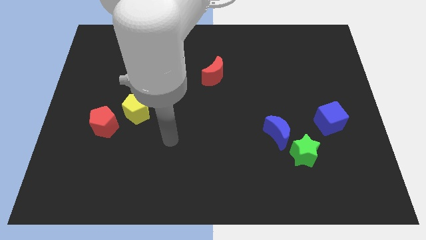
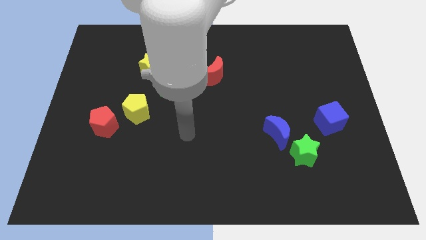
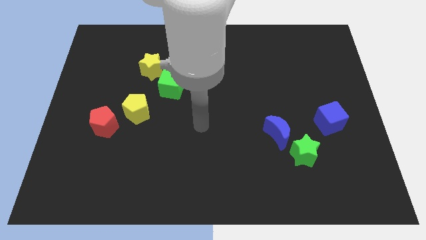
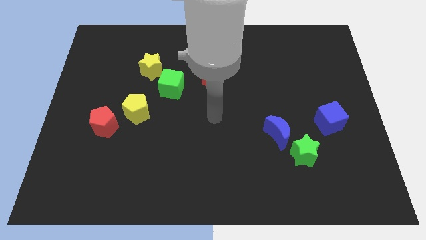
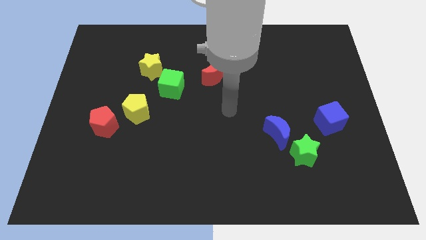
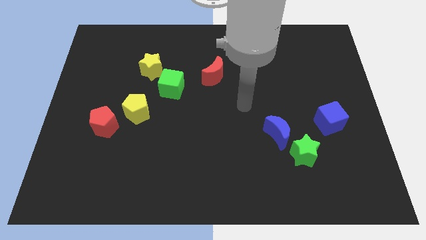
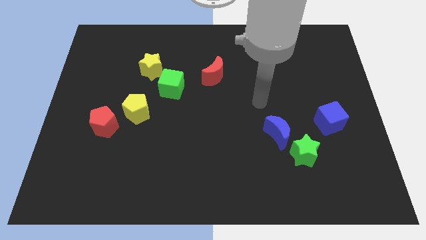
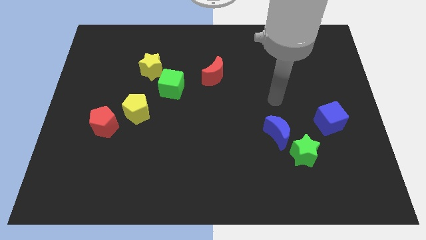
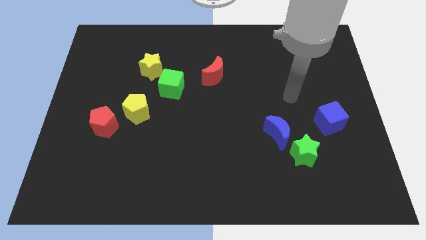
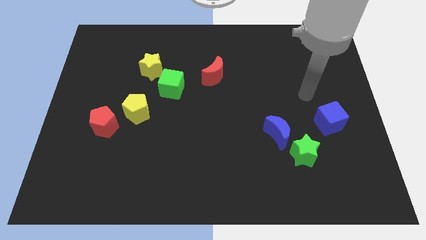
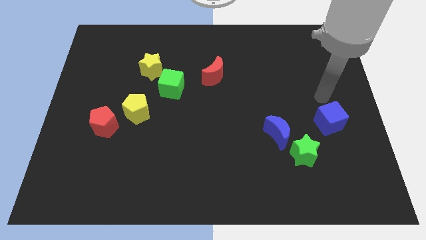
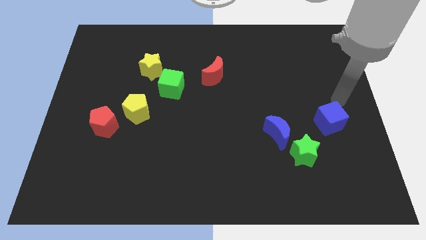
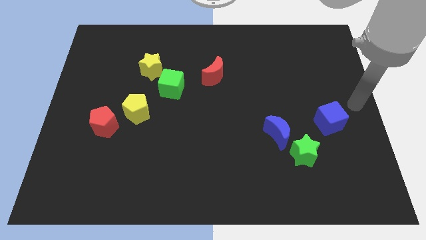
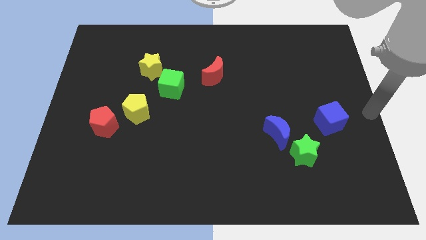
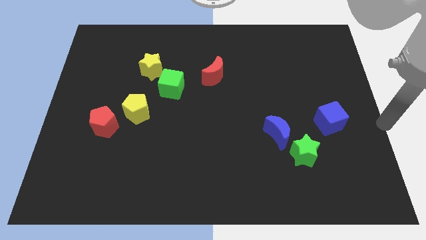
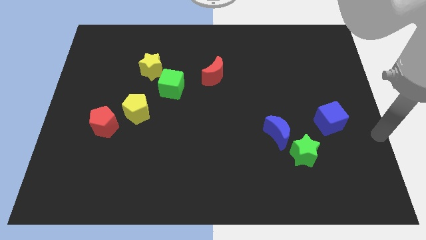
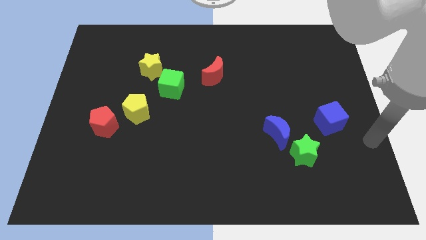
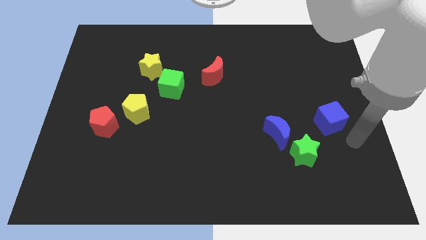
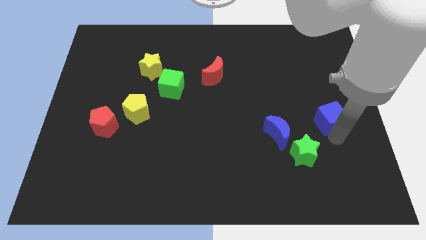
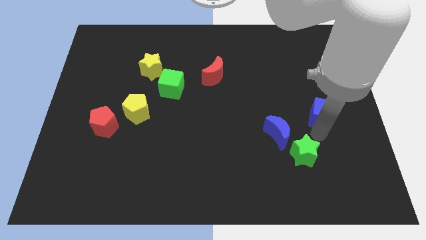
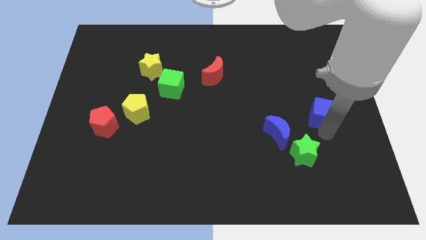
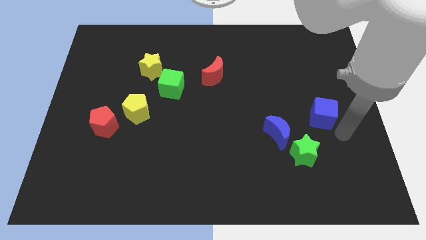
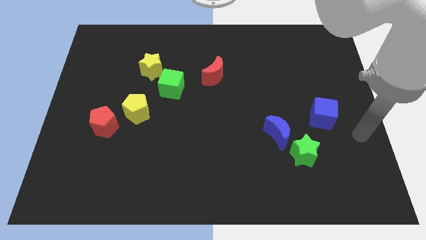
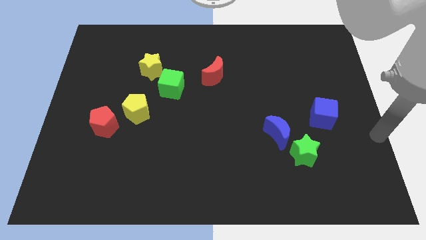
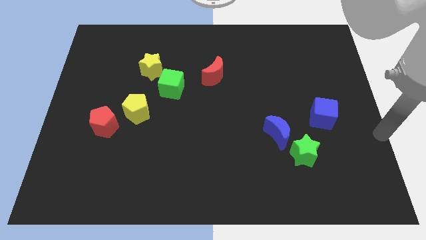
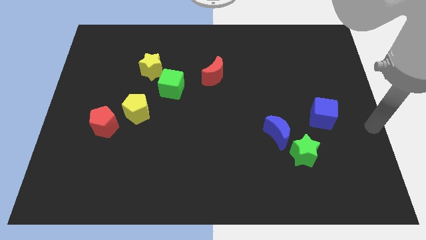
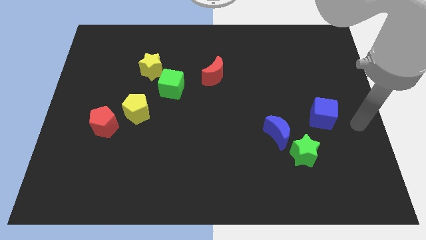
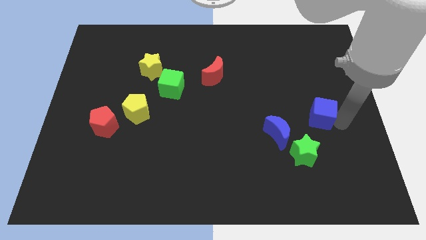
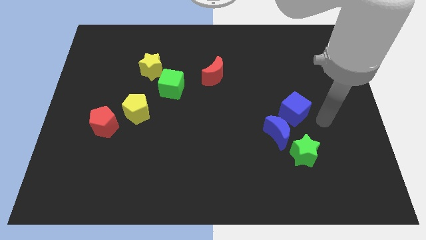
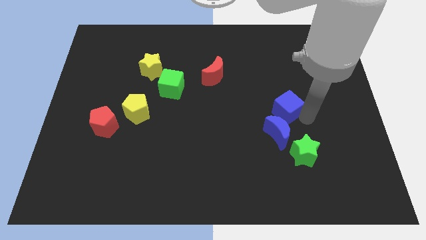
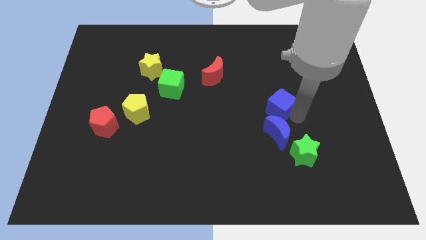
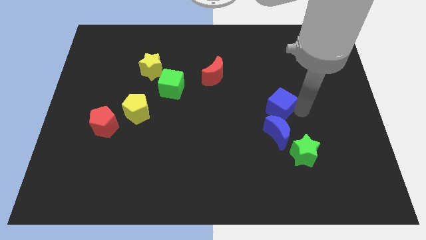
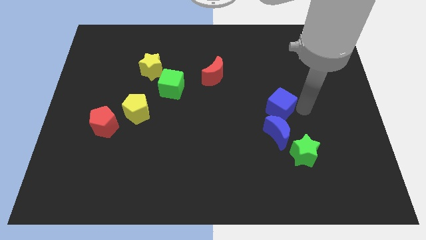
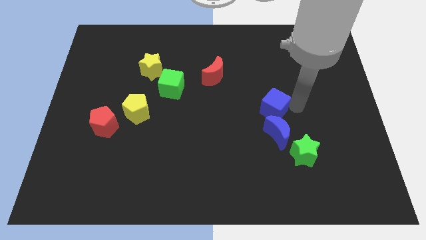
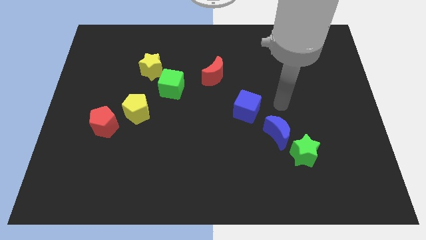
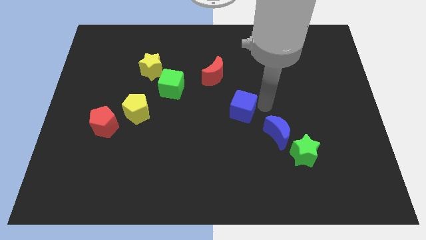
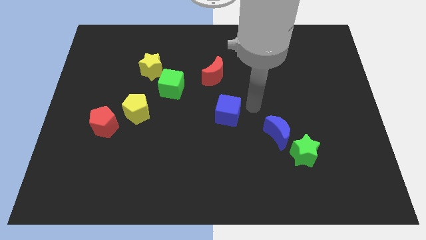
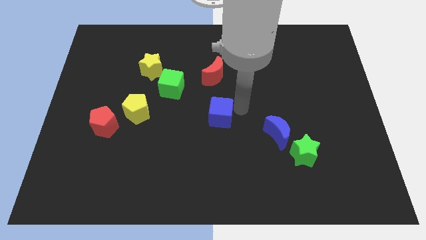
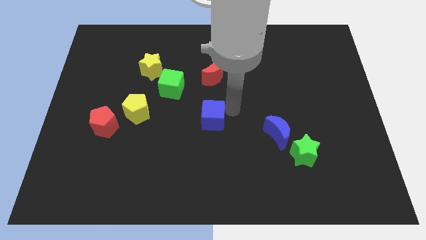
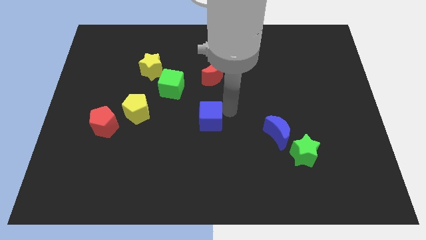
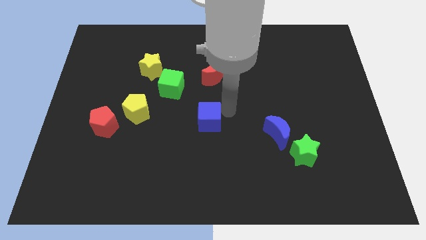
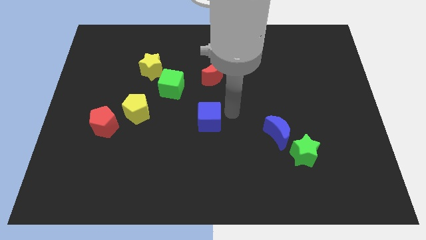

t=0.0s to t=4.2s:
place the blue cube to the center of the board

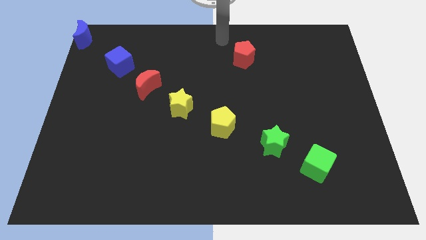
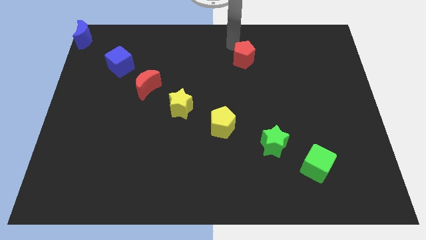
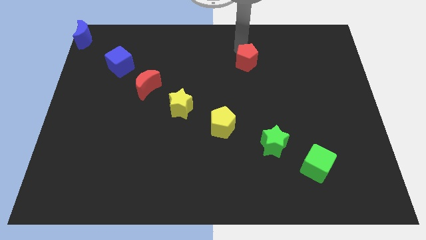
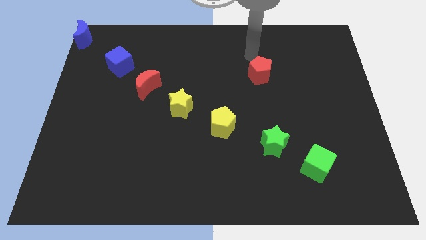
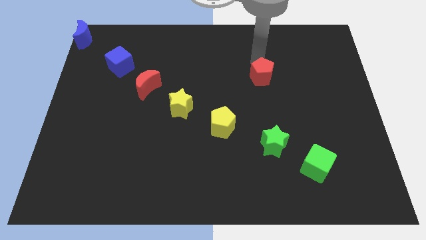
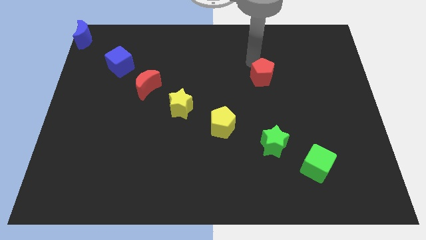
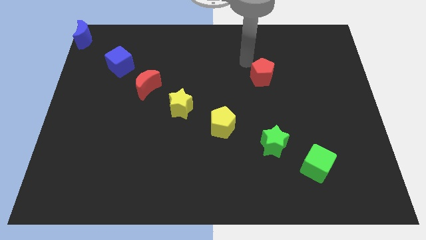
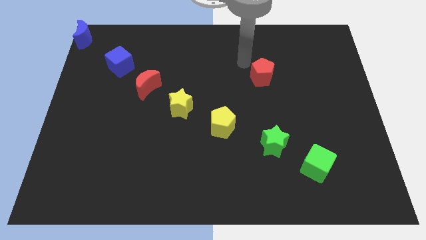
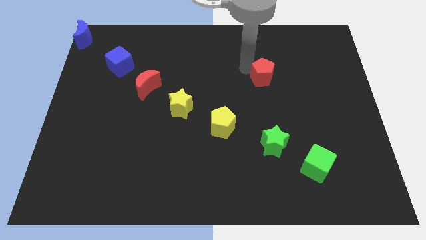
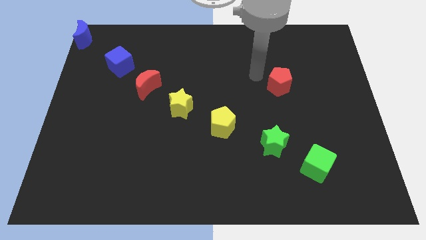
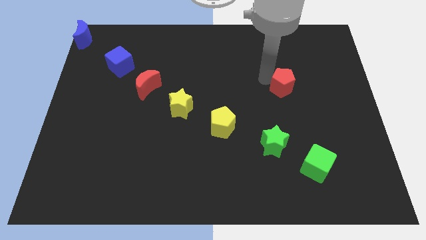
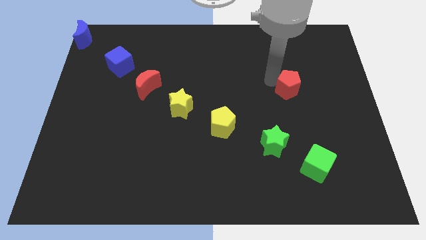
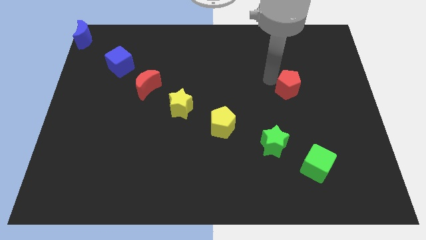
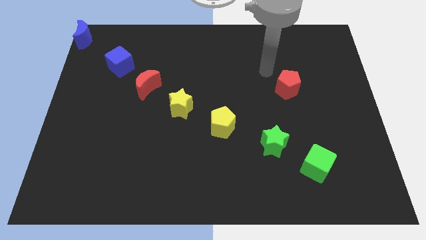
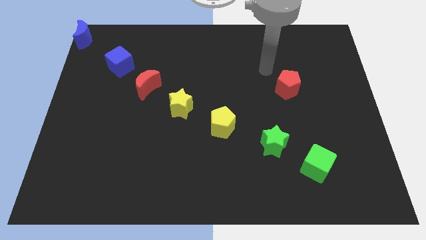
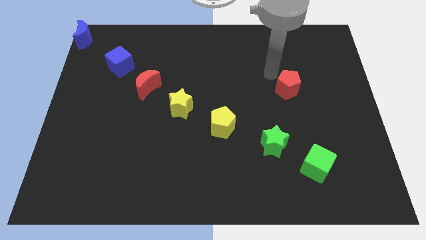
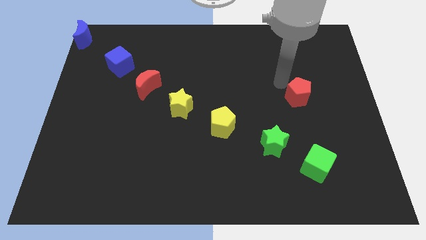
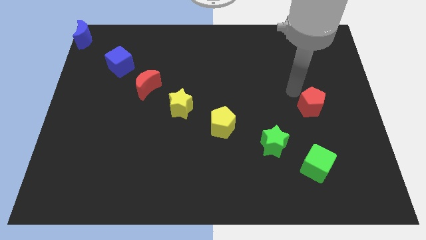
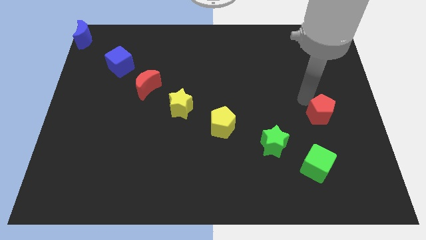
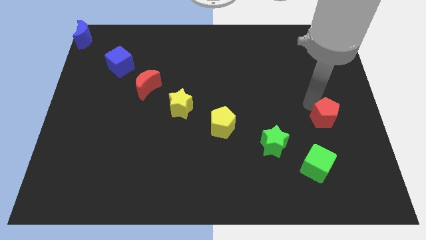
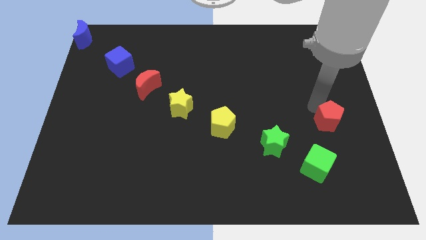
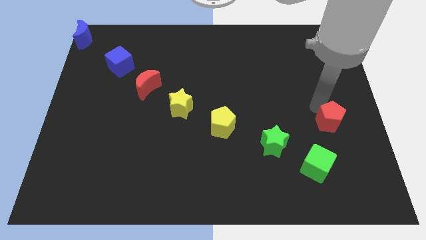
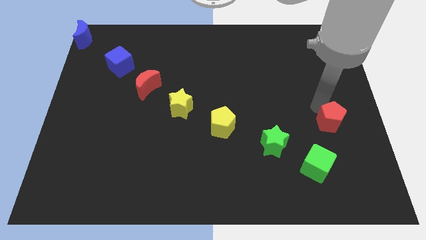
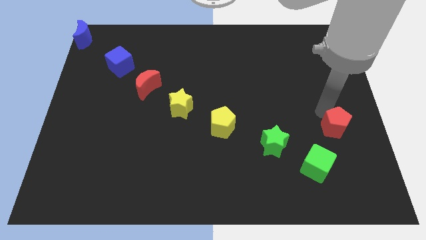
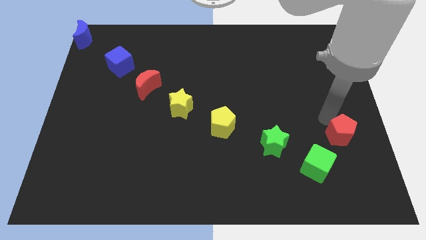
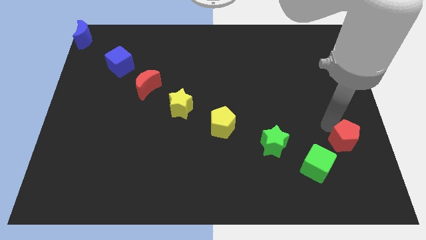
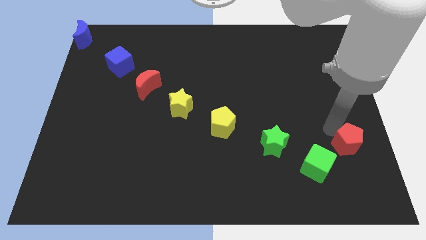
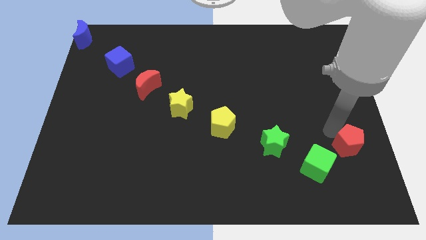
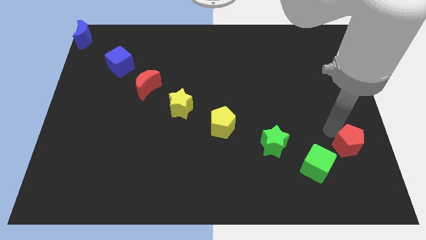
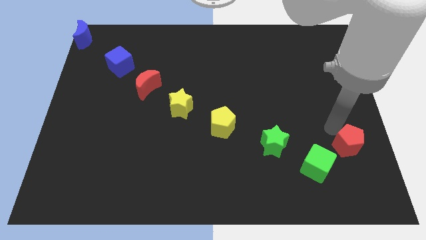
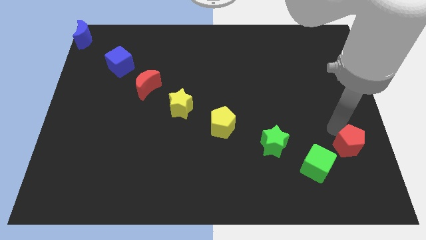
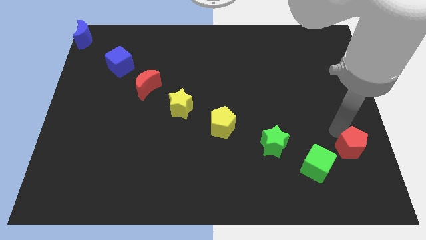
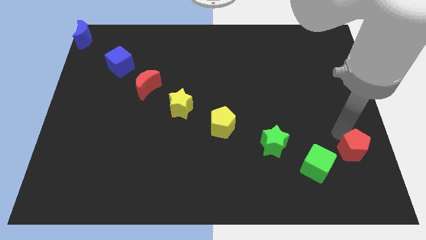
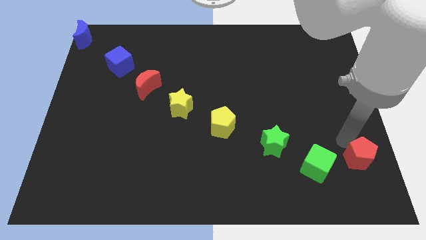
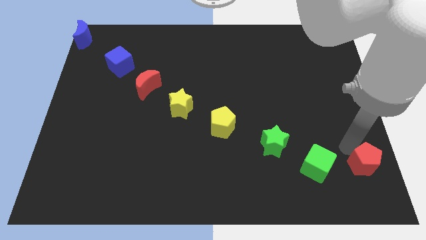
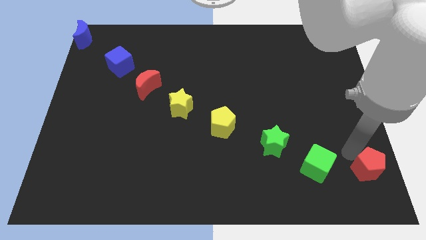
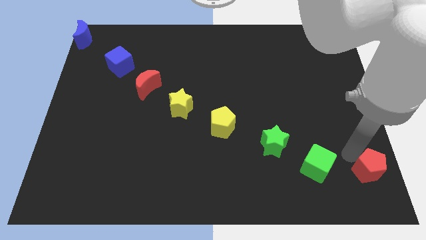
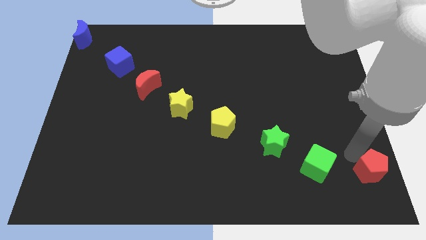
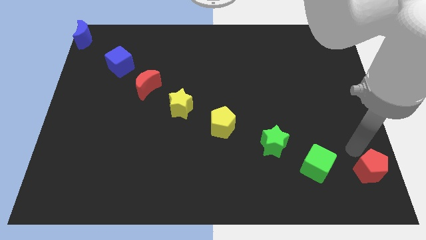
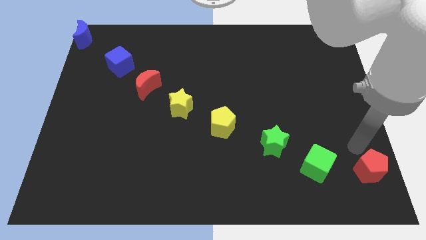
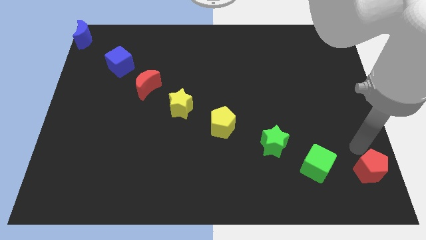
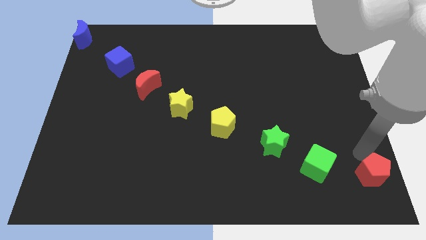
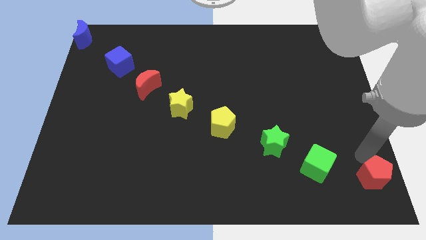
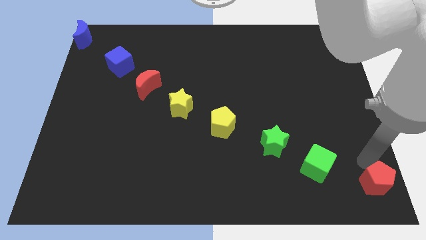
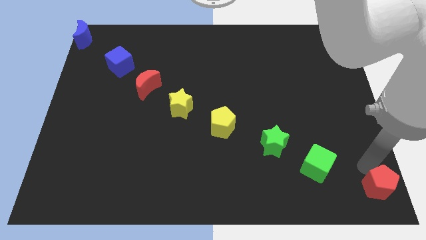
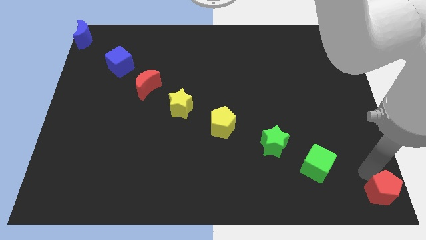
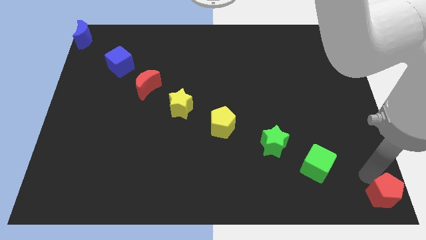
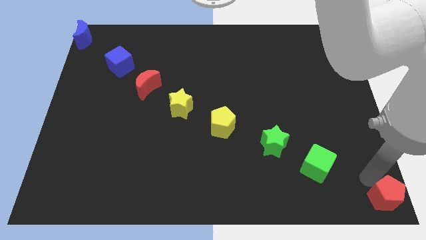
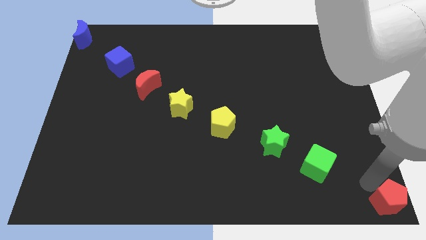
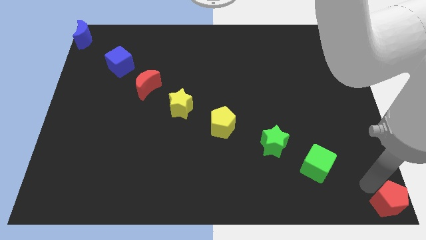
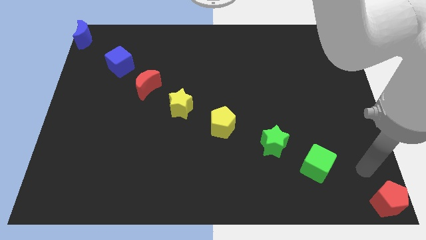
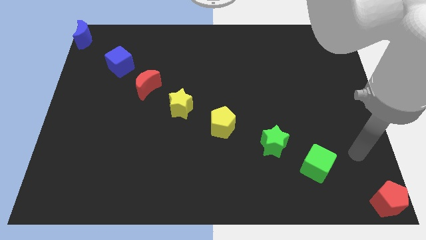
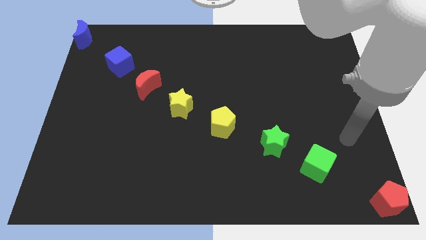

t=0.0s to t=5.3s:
push the red pentagon towards the bottom right corner of the board
